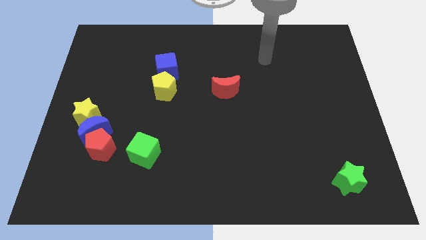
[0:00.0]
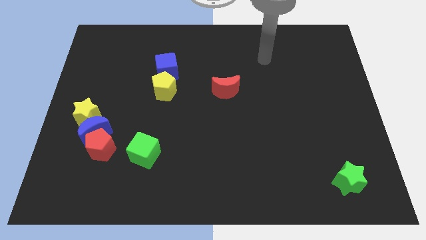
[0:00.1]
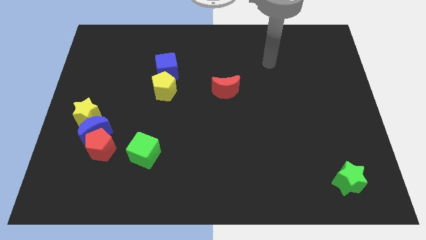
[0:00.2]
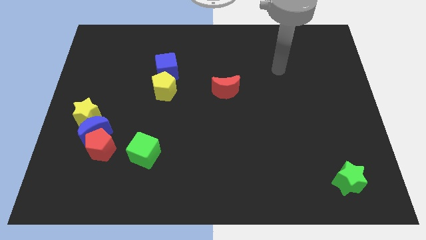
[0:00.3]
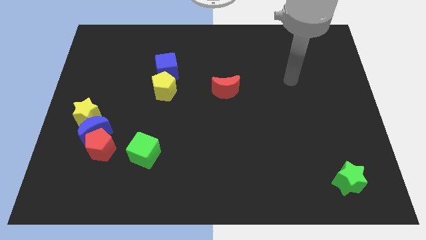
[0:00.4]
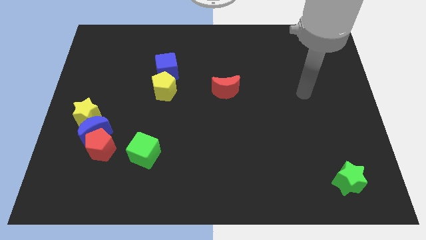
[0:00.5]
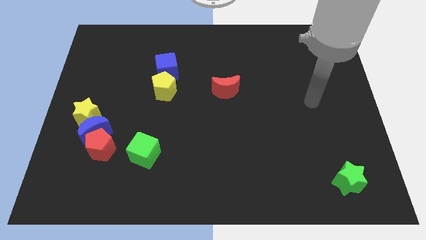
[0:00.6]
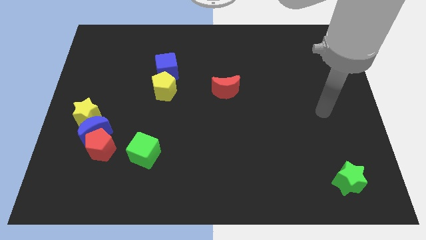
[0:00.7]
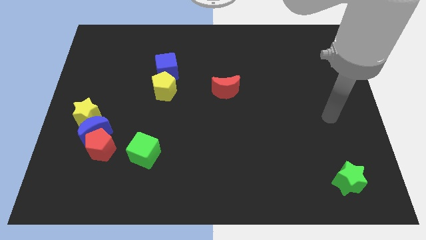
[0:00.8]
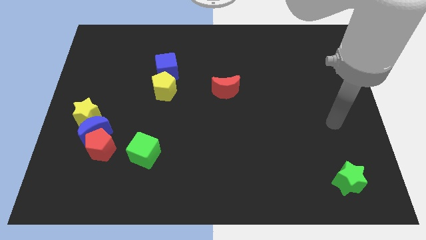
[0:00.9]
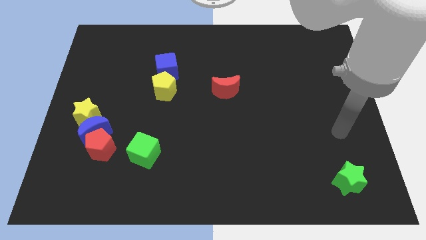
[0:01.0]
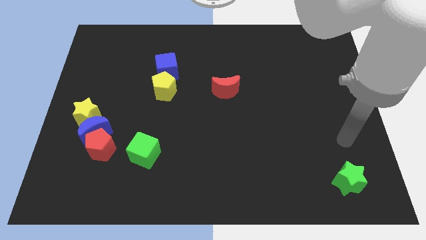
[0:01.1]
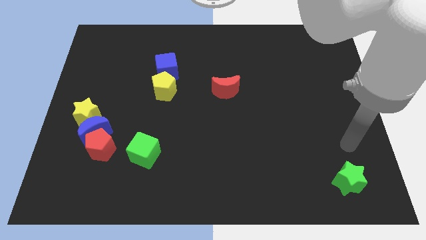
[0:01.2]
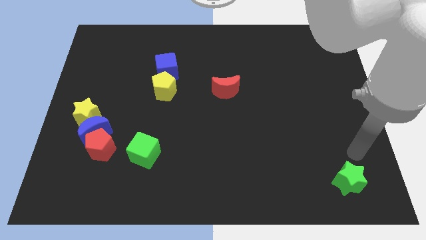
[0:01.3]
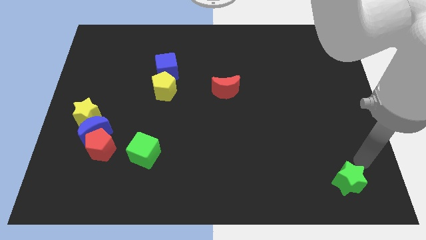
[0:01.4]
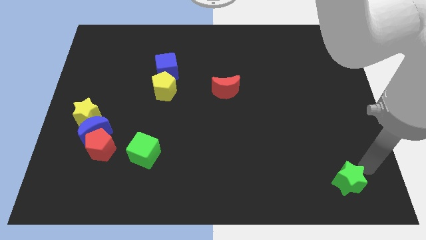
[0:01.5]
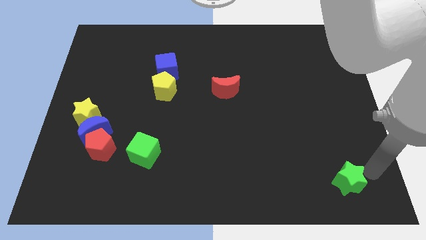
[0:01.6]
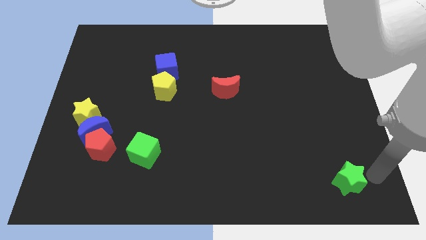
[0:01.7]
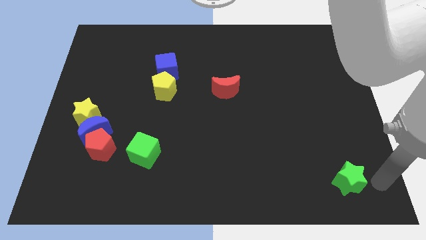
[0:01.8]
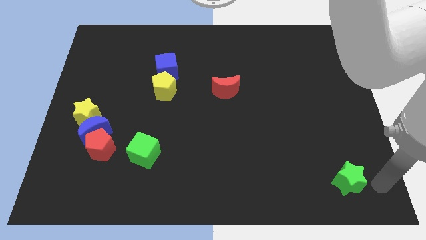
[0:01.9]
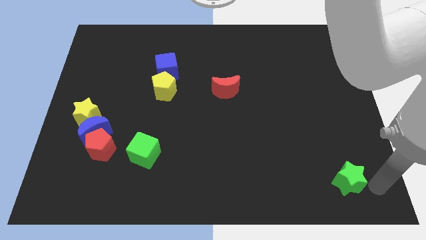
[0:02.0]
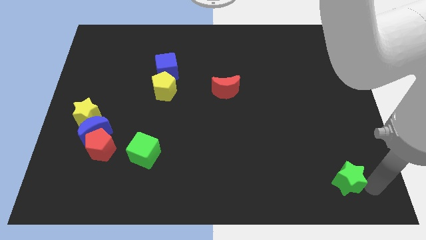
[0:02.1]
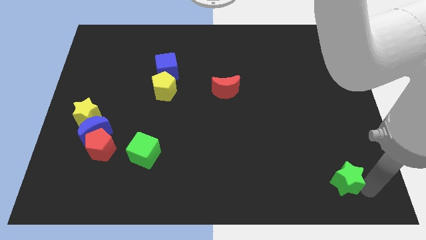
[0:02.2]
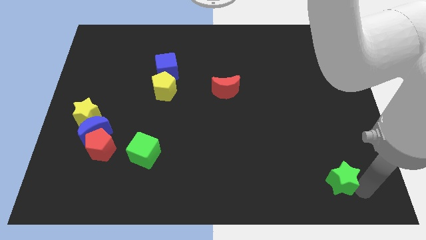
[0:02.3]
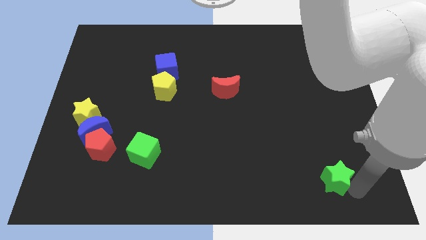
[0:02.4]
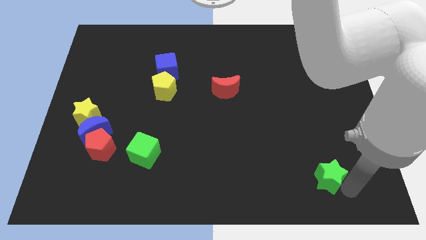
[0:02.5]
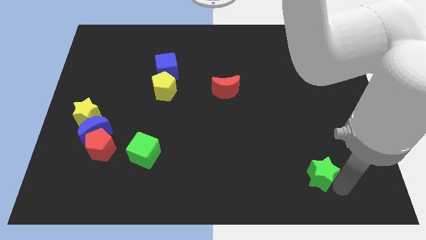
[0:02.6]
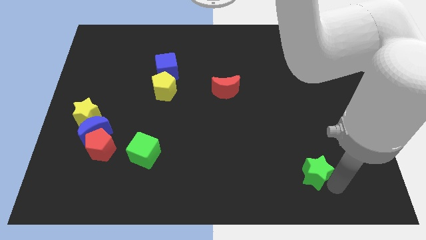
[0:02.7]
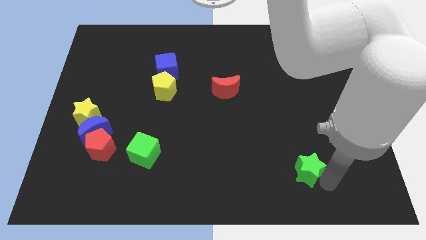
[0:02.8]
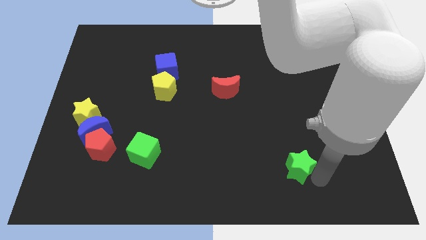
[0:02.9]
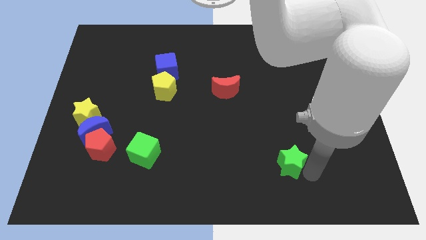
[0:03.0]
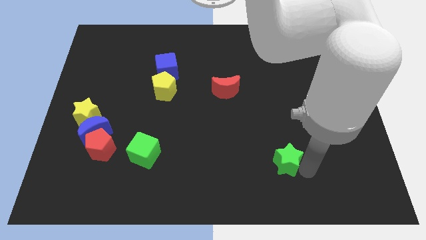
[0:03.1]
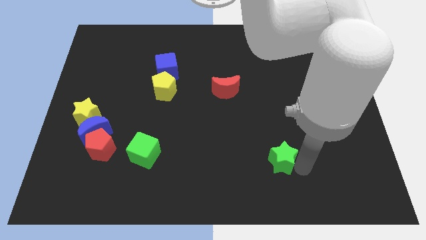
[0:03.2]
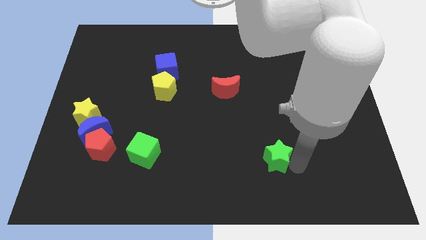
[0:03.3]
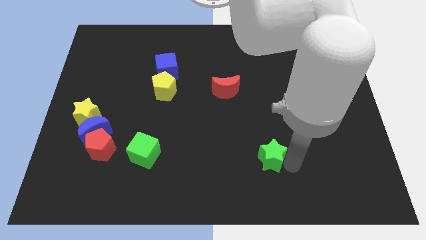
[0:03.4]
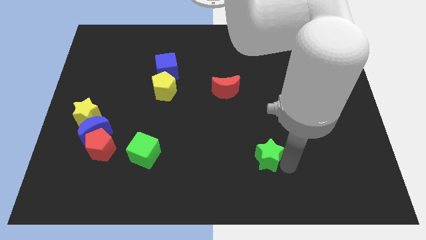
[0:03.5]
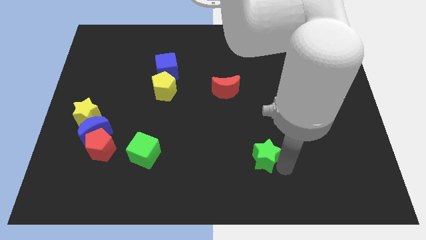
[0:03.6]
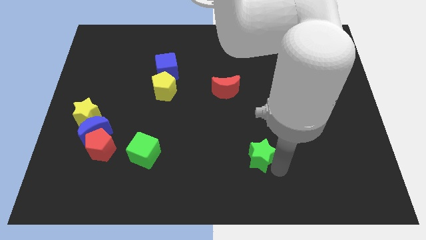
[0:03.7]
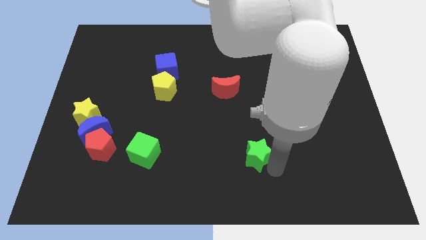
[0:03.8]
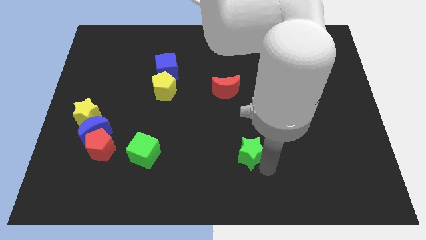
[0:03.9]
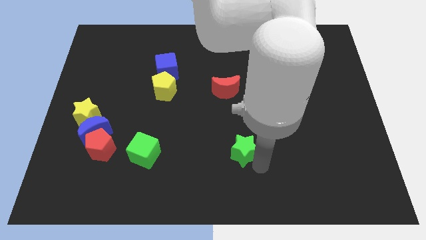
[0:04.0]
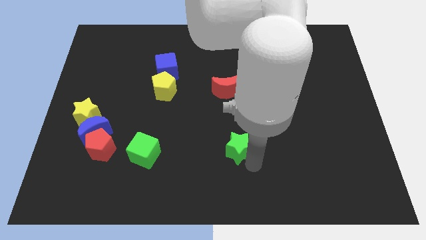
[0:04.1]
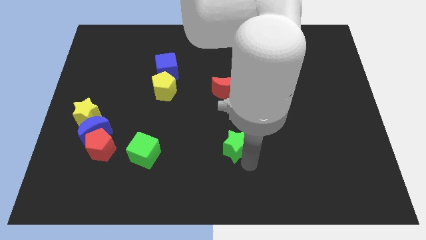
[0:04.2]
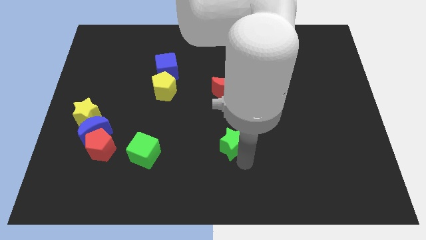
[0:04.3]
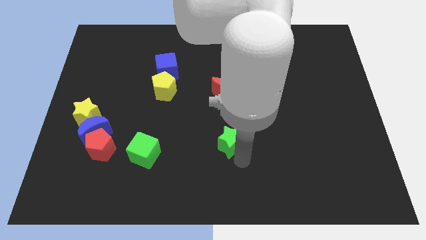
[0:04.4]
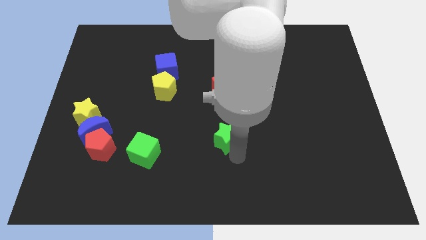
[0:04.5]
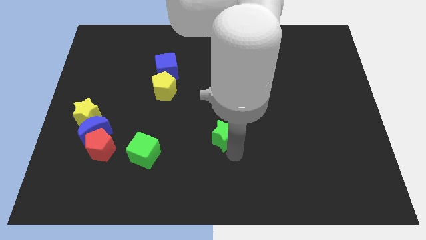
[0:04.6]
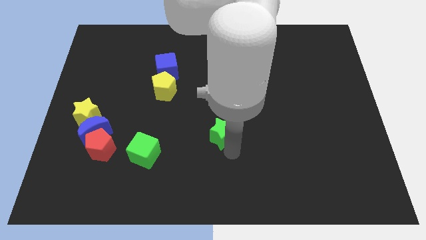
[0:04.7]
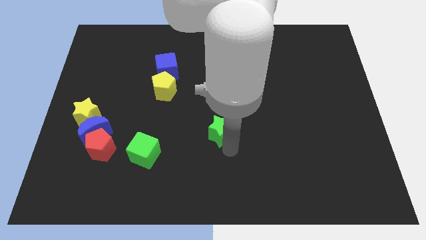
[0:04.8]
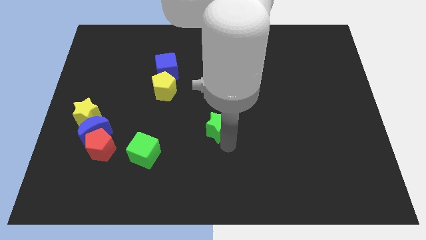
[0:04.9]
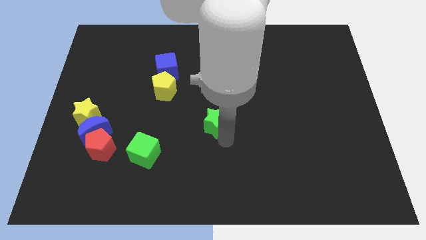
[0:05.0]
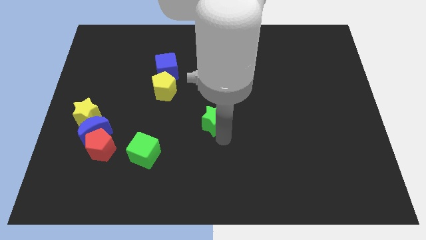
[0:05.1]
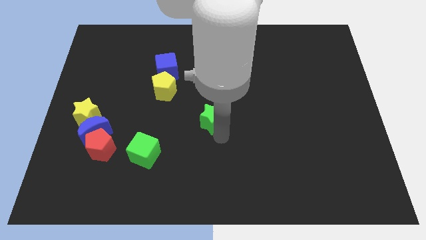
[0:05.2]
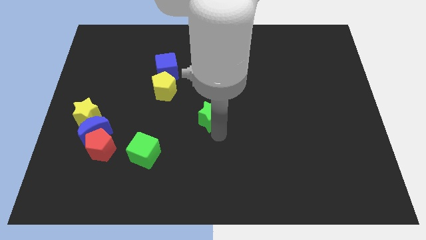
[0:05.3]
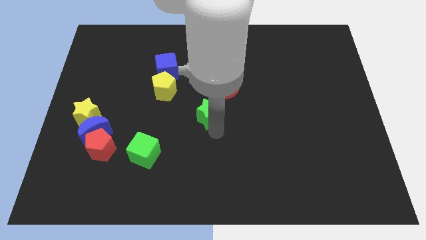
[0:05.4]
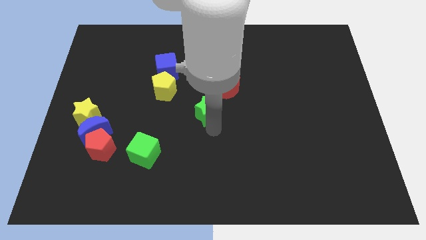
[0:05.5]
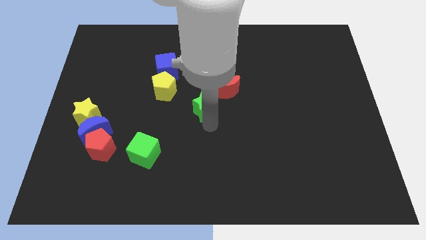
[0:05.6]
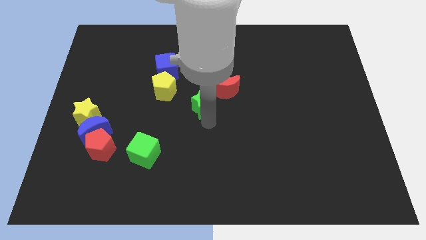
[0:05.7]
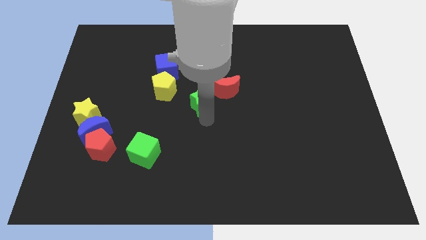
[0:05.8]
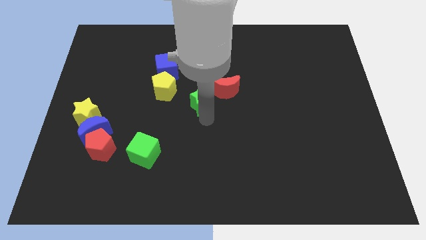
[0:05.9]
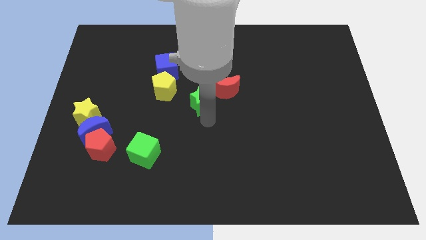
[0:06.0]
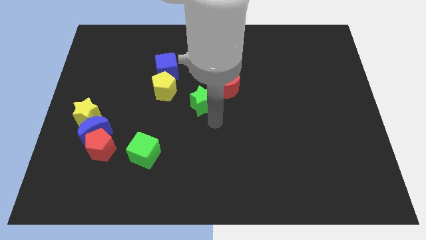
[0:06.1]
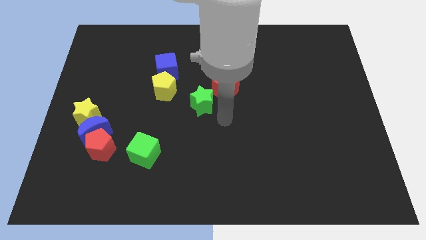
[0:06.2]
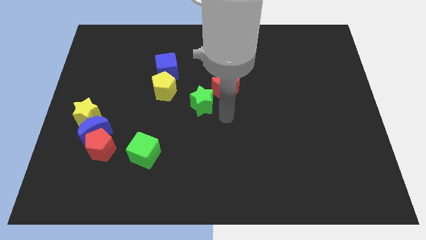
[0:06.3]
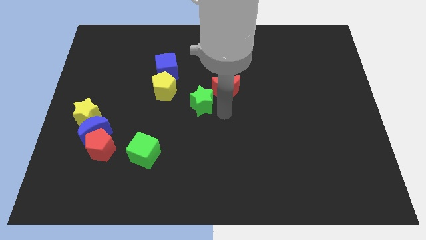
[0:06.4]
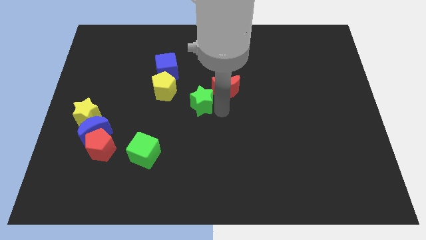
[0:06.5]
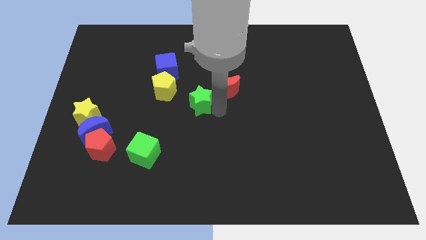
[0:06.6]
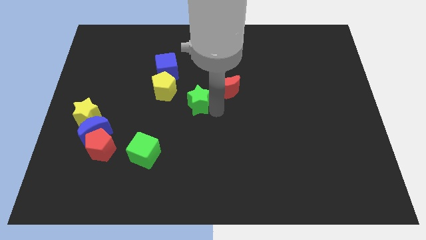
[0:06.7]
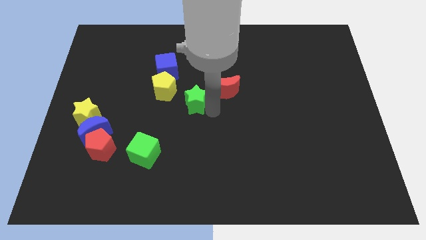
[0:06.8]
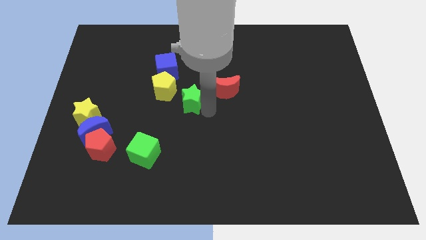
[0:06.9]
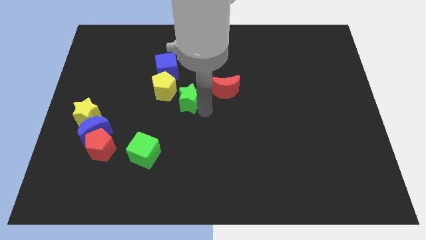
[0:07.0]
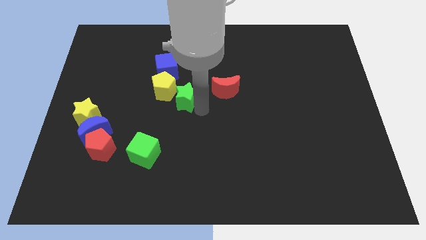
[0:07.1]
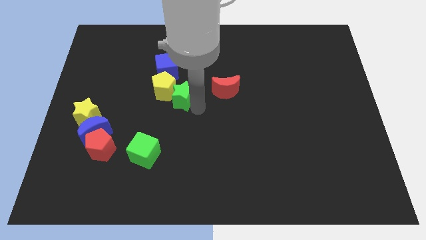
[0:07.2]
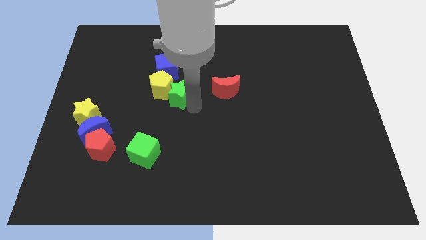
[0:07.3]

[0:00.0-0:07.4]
move the green star towards the yellow pentagon

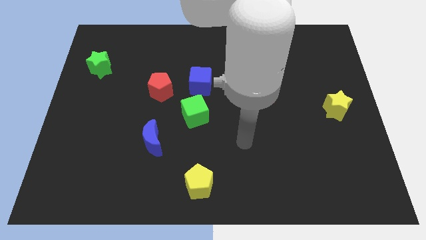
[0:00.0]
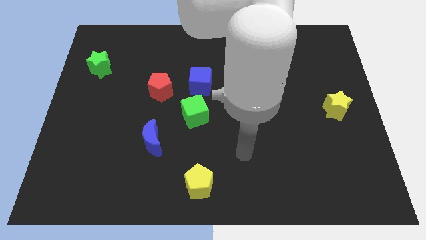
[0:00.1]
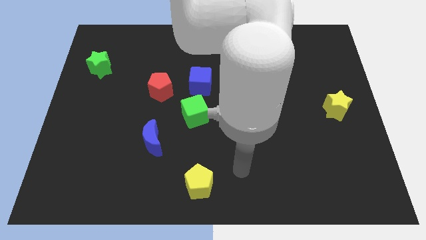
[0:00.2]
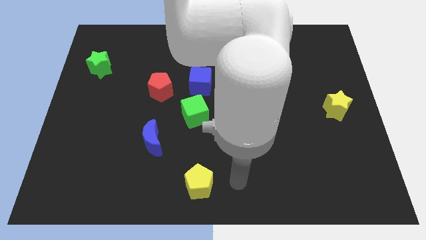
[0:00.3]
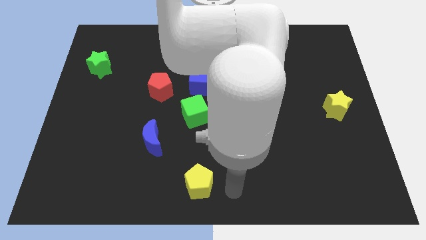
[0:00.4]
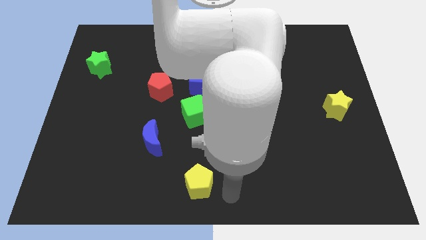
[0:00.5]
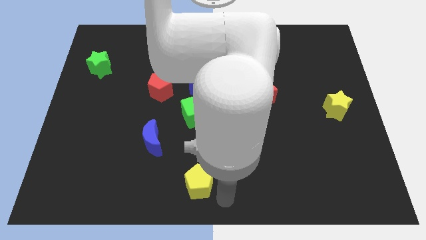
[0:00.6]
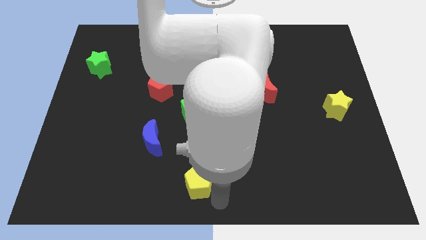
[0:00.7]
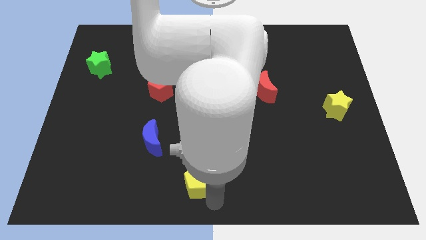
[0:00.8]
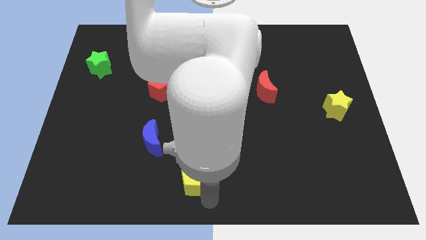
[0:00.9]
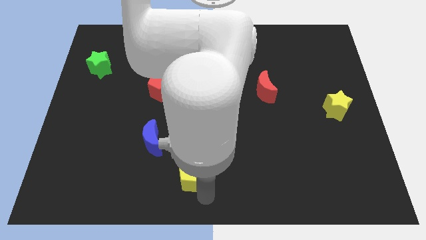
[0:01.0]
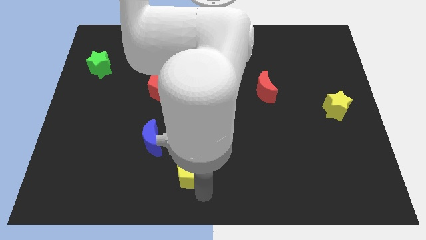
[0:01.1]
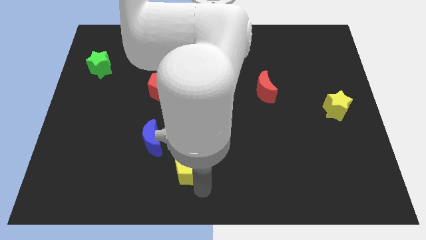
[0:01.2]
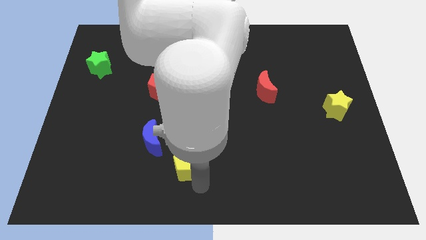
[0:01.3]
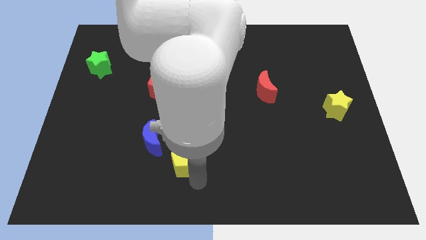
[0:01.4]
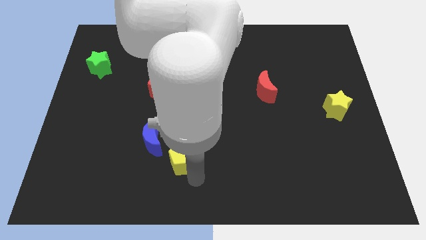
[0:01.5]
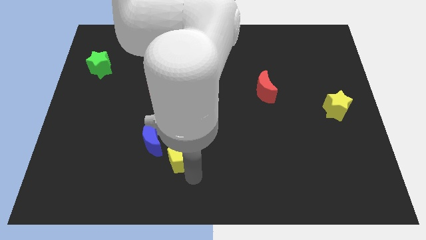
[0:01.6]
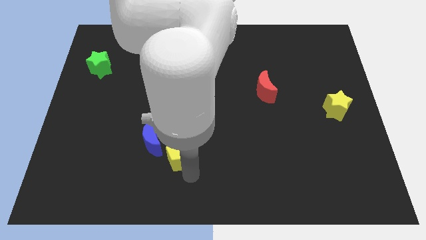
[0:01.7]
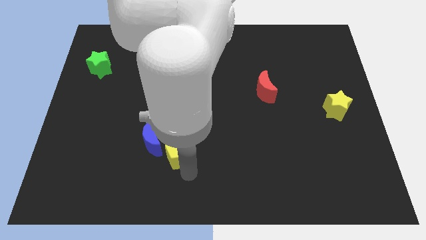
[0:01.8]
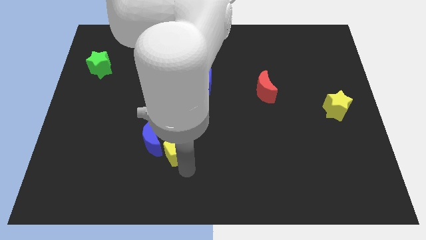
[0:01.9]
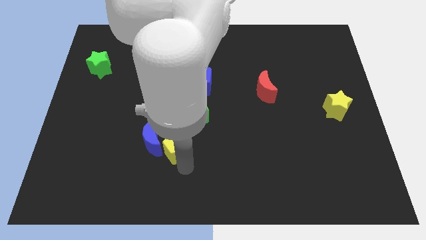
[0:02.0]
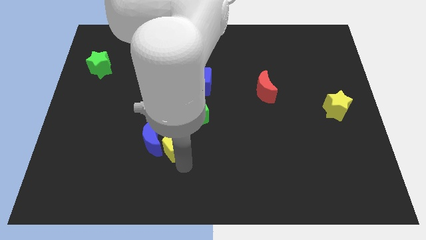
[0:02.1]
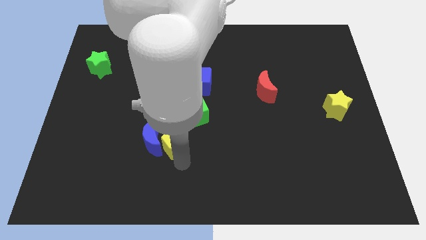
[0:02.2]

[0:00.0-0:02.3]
put the yellow pentagon close to the blue moon
